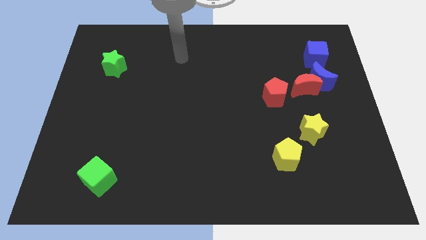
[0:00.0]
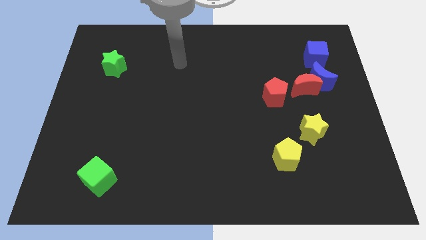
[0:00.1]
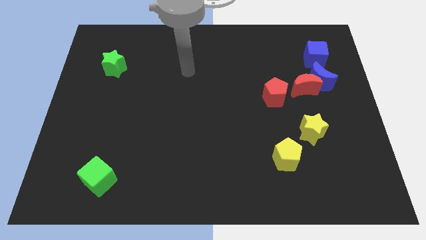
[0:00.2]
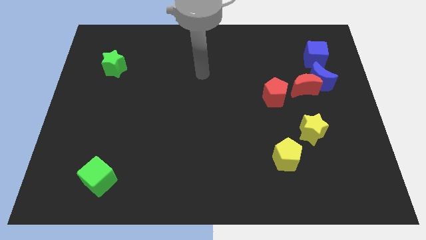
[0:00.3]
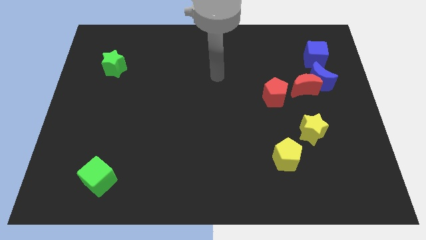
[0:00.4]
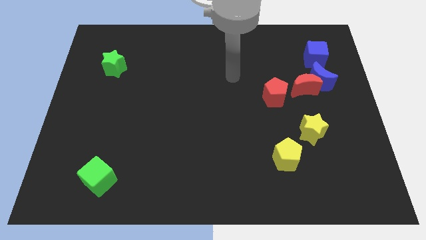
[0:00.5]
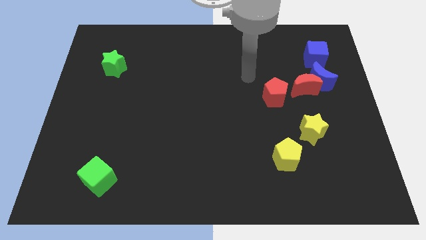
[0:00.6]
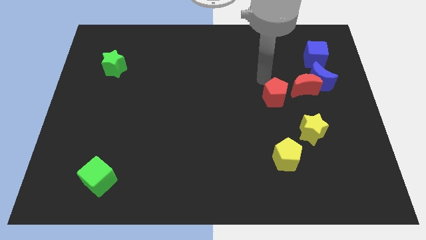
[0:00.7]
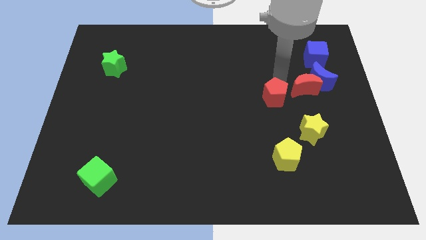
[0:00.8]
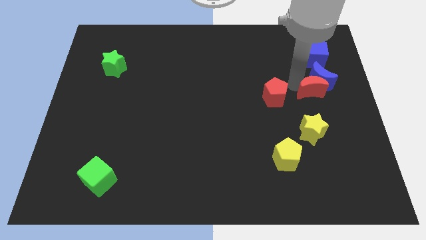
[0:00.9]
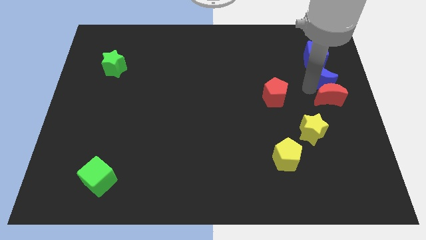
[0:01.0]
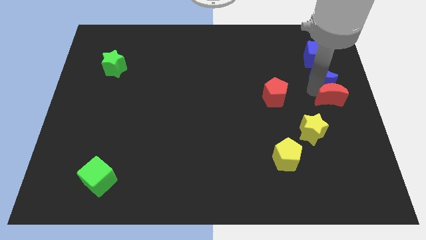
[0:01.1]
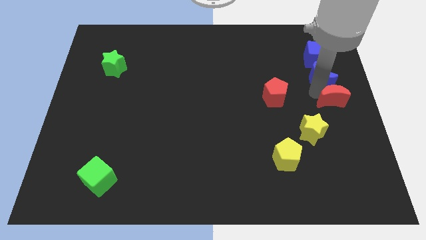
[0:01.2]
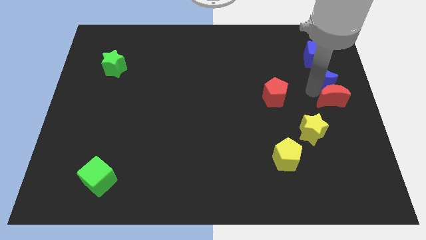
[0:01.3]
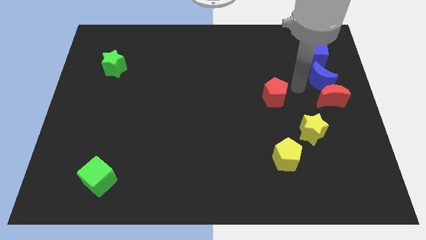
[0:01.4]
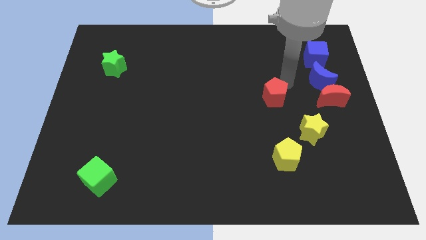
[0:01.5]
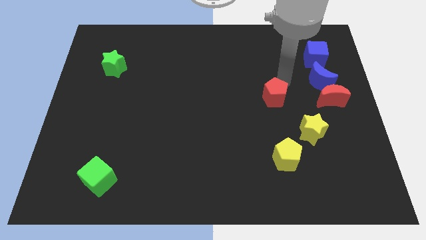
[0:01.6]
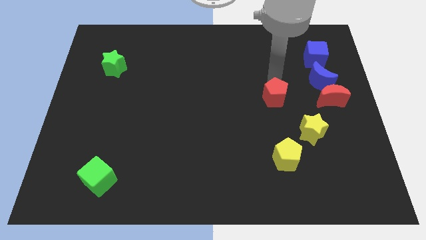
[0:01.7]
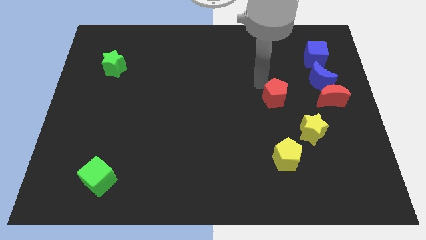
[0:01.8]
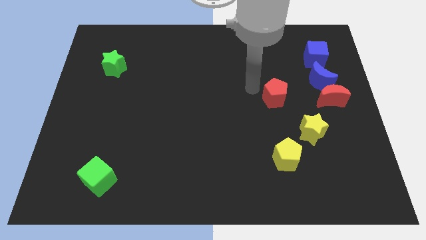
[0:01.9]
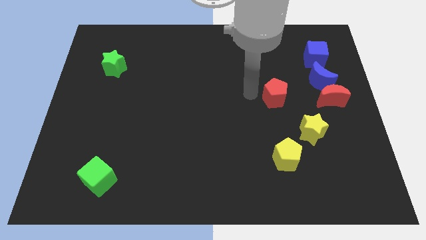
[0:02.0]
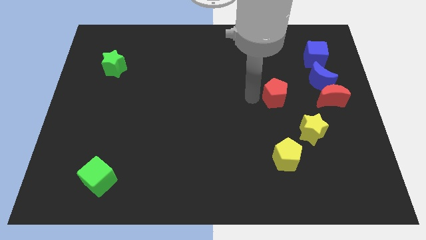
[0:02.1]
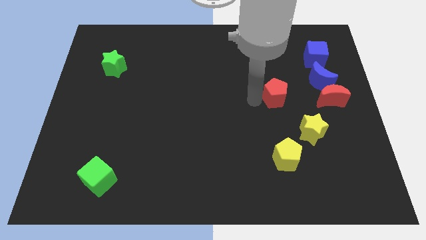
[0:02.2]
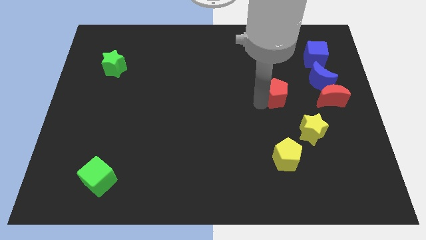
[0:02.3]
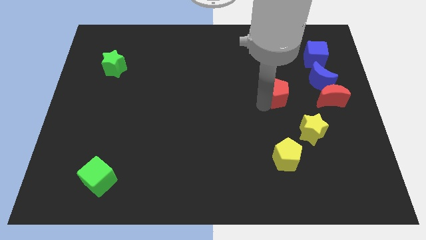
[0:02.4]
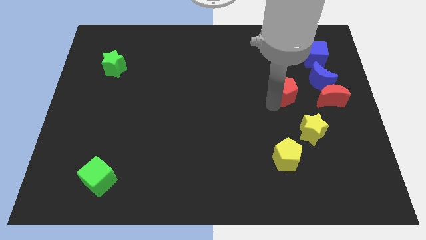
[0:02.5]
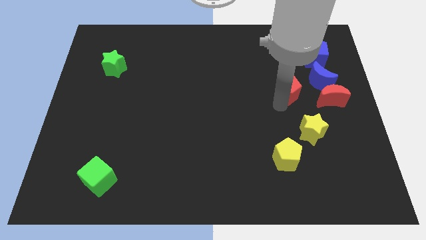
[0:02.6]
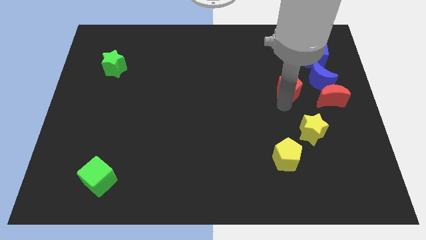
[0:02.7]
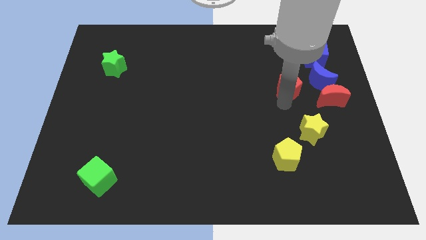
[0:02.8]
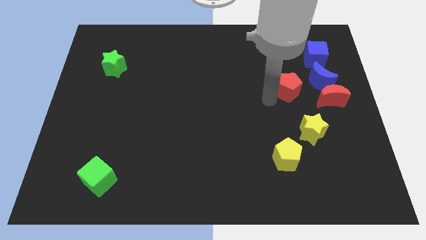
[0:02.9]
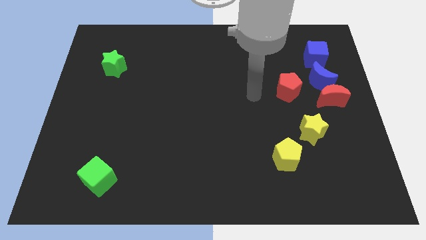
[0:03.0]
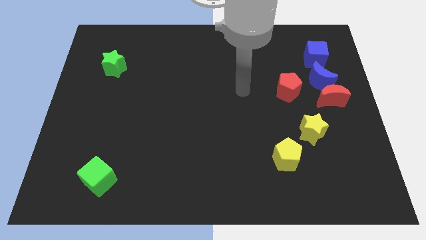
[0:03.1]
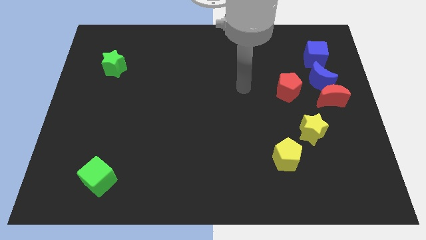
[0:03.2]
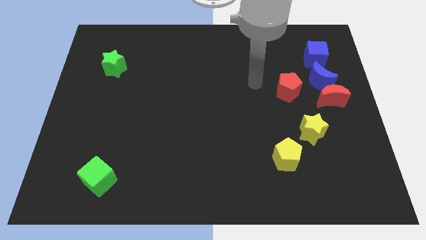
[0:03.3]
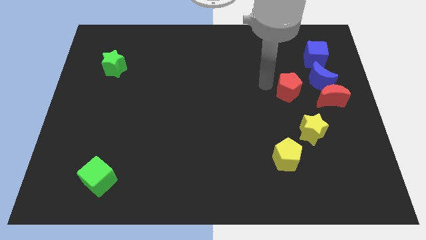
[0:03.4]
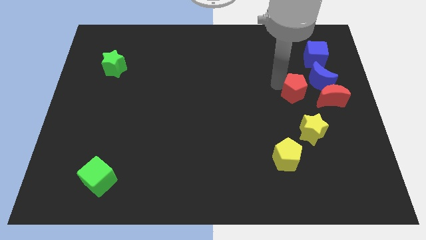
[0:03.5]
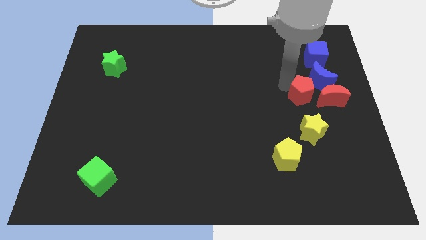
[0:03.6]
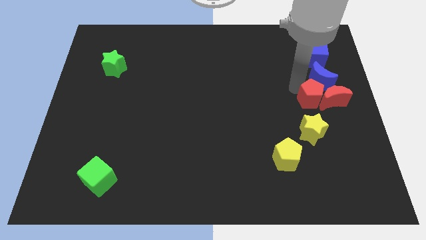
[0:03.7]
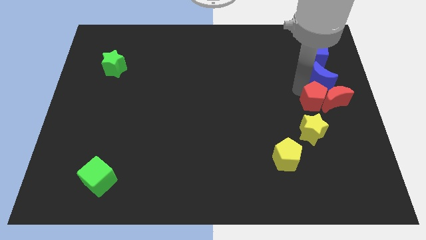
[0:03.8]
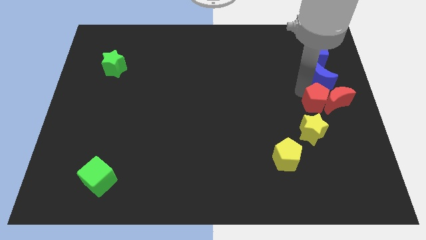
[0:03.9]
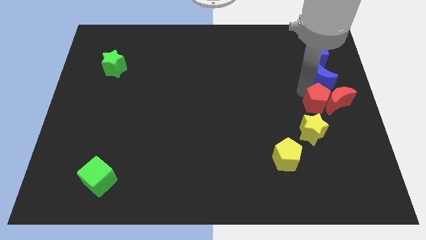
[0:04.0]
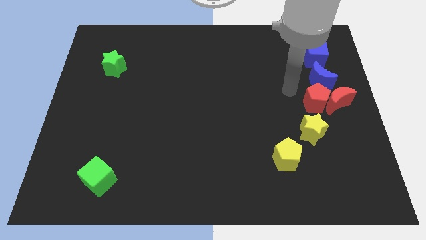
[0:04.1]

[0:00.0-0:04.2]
push the red pentagon into the red moon

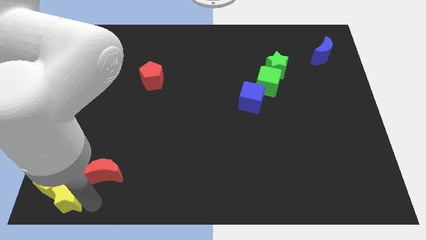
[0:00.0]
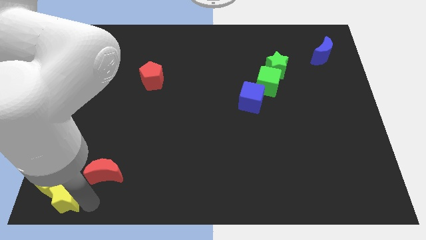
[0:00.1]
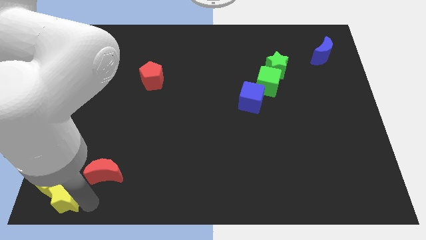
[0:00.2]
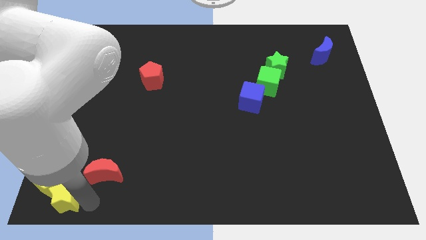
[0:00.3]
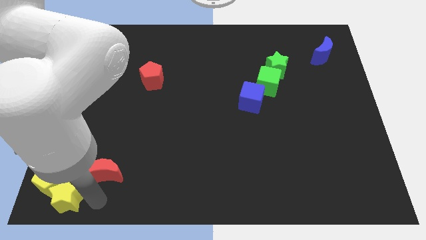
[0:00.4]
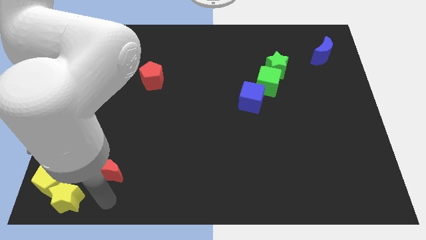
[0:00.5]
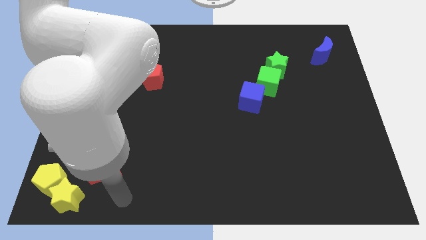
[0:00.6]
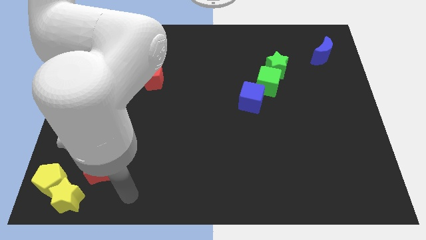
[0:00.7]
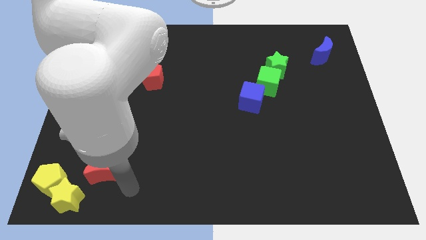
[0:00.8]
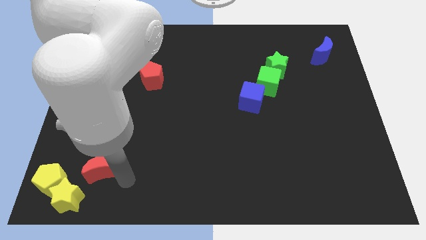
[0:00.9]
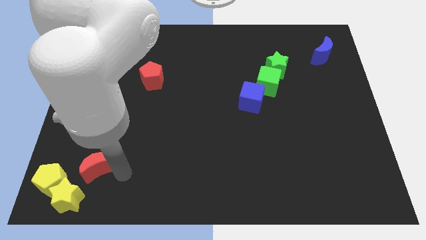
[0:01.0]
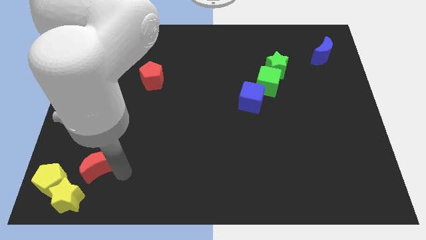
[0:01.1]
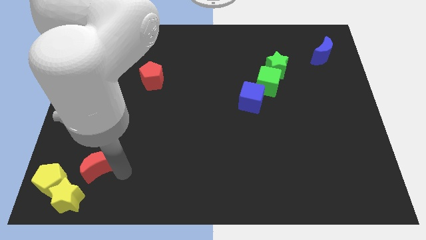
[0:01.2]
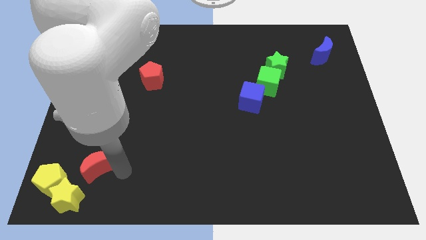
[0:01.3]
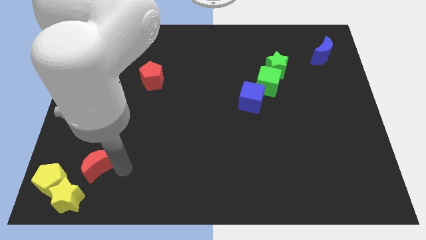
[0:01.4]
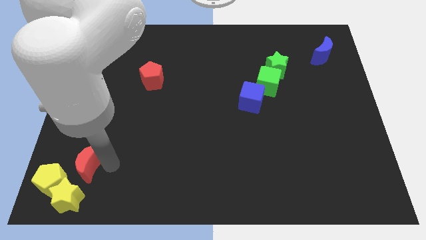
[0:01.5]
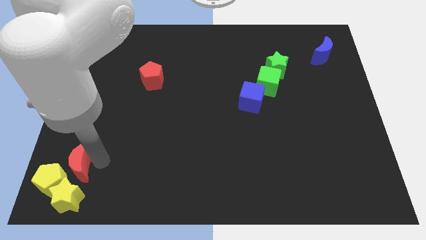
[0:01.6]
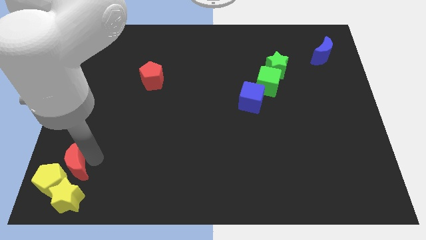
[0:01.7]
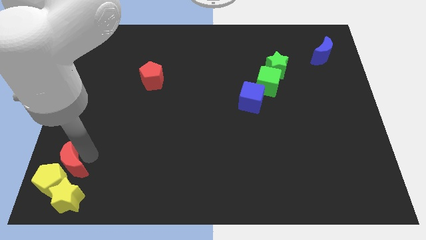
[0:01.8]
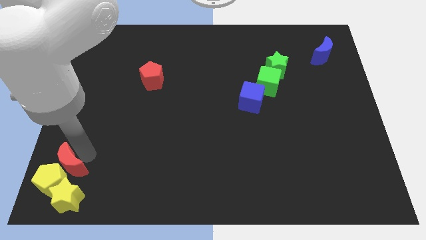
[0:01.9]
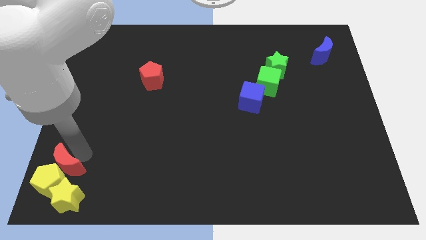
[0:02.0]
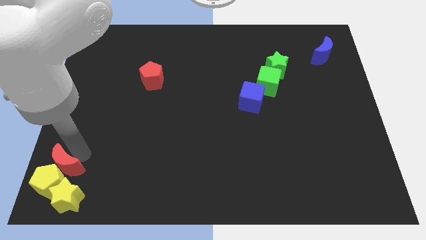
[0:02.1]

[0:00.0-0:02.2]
group up the yellow blocks with the red crescent at the bottom left side of the board

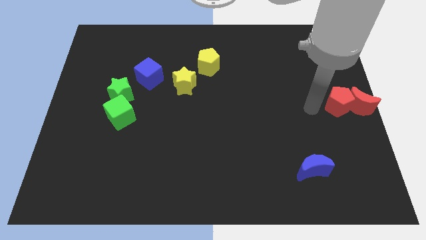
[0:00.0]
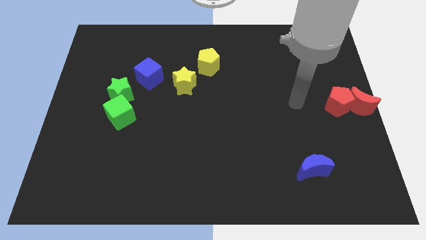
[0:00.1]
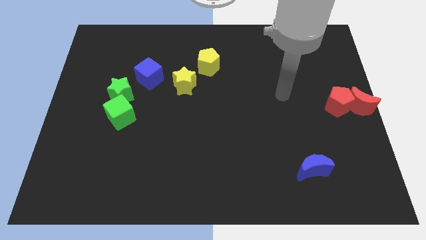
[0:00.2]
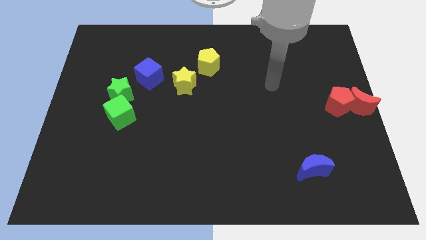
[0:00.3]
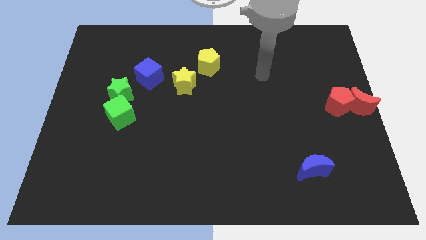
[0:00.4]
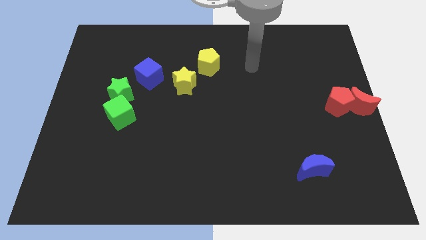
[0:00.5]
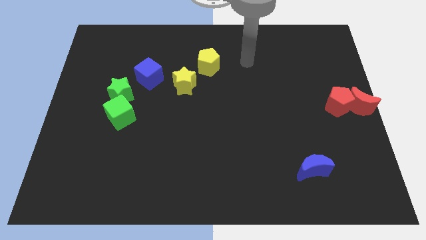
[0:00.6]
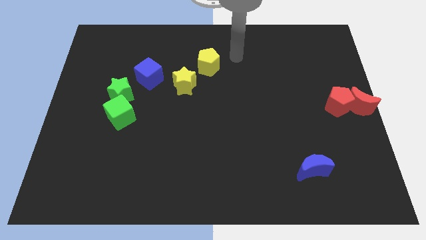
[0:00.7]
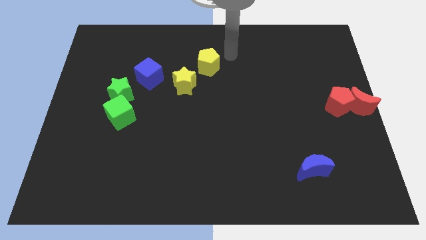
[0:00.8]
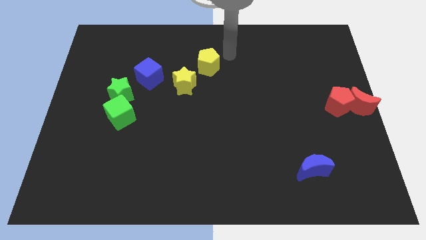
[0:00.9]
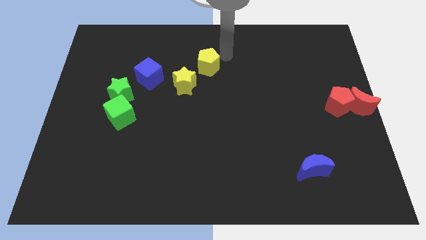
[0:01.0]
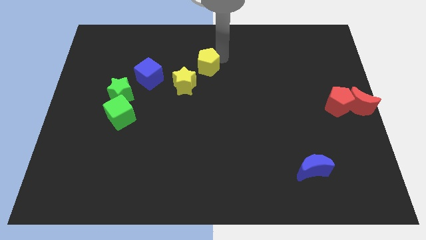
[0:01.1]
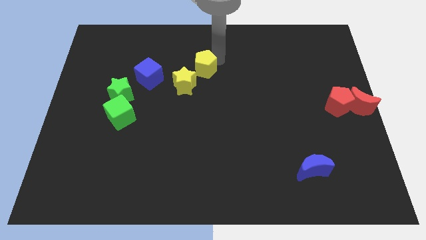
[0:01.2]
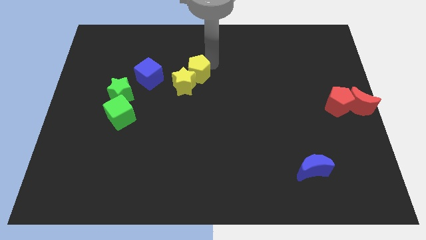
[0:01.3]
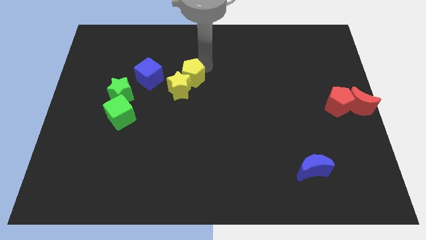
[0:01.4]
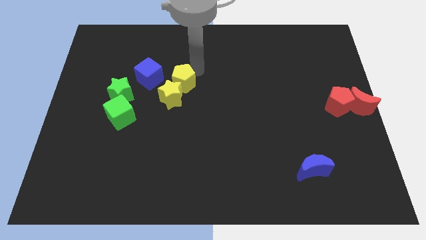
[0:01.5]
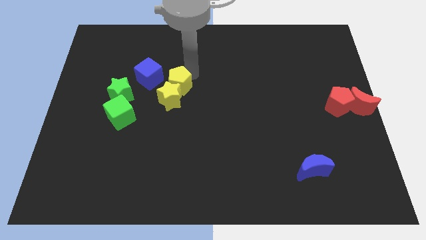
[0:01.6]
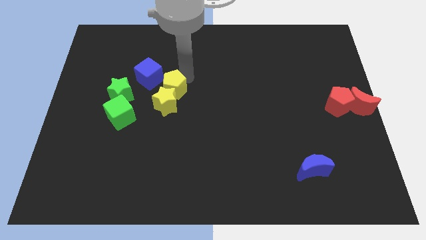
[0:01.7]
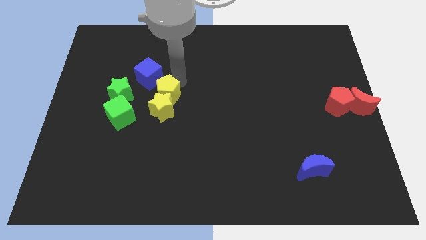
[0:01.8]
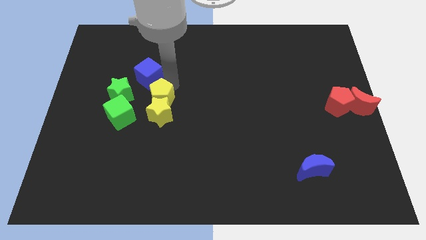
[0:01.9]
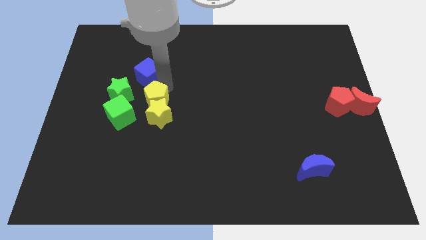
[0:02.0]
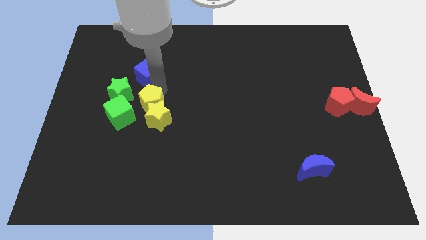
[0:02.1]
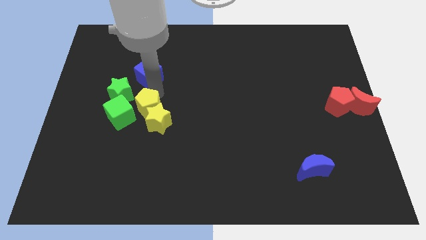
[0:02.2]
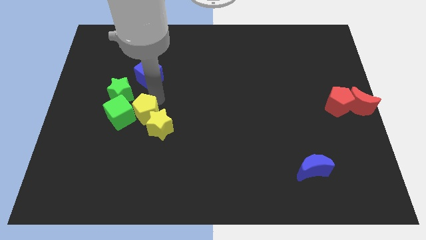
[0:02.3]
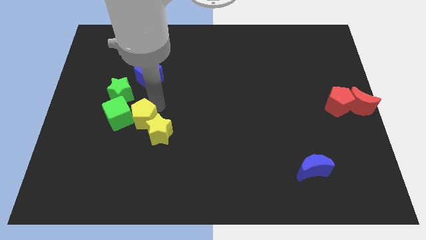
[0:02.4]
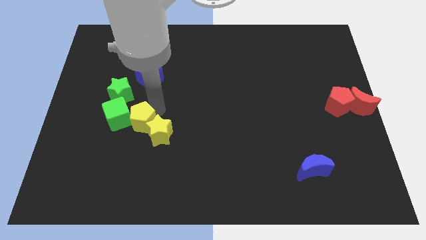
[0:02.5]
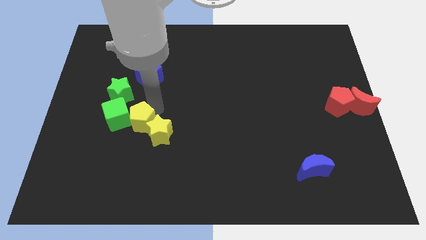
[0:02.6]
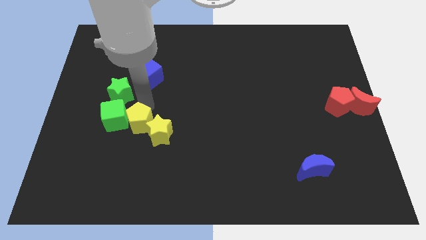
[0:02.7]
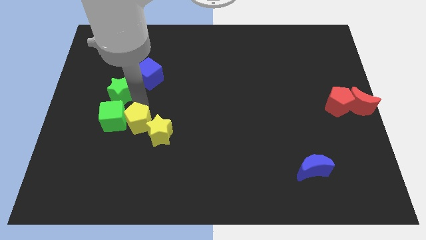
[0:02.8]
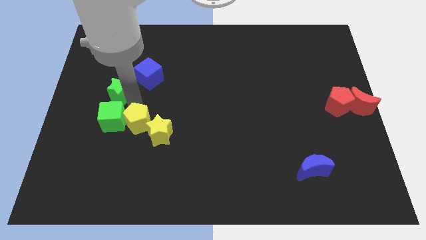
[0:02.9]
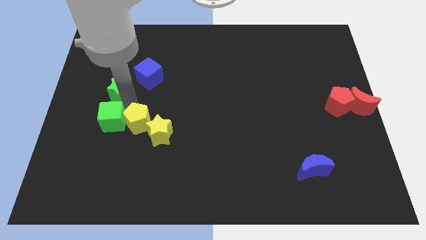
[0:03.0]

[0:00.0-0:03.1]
move the yellow blocks together to the right side of the green cube
